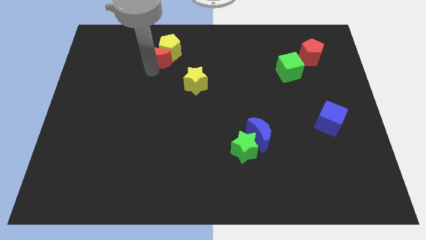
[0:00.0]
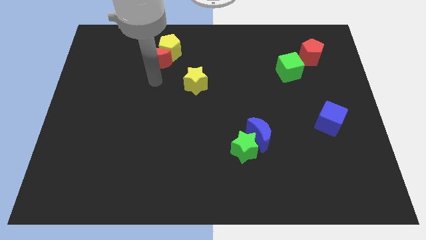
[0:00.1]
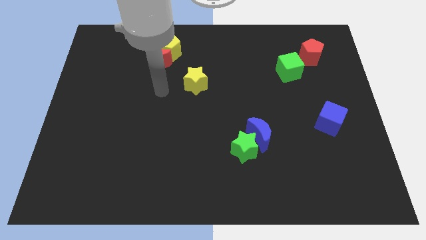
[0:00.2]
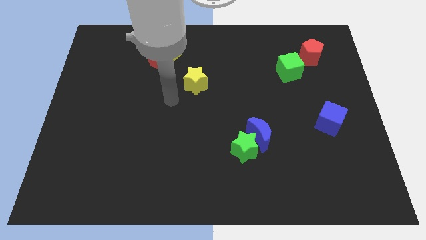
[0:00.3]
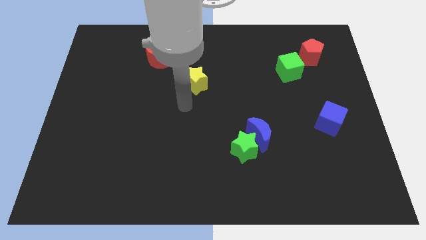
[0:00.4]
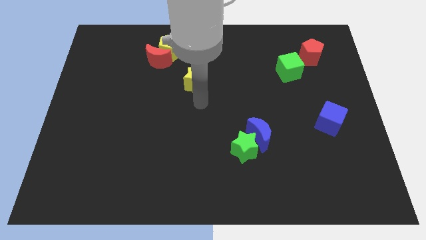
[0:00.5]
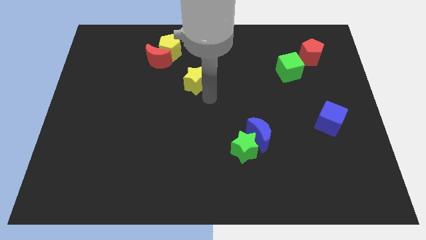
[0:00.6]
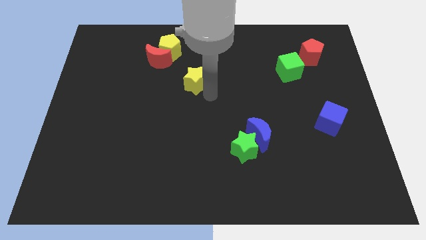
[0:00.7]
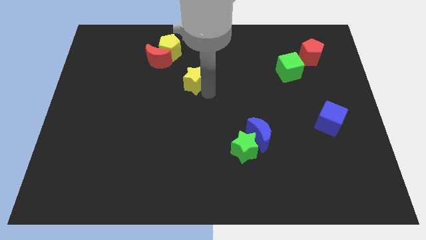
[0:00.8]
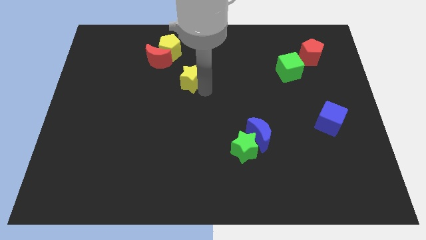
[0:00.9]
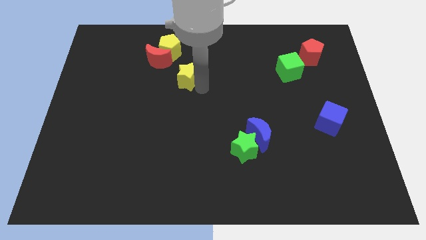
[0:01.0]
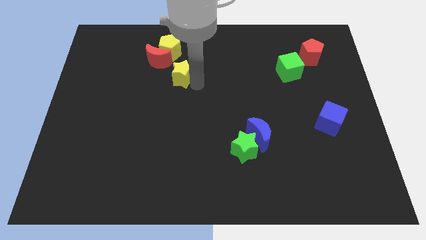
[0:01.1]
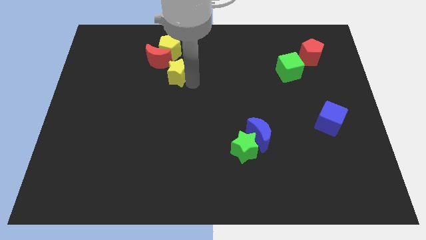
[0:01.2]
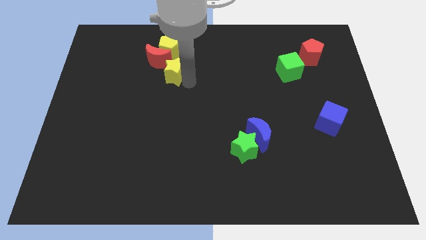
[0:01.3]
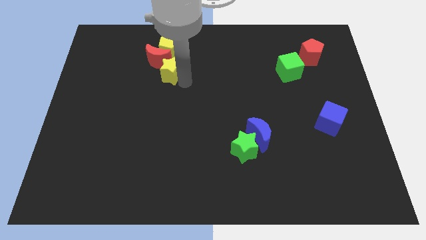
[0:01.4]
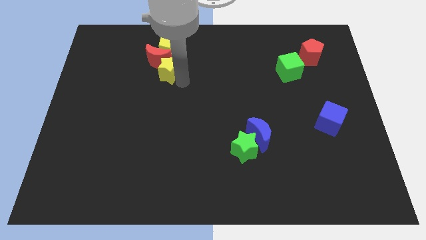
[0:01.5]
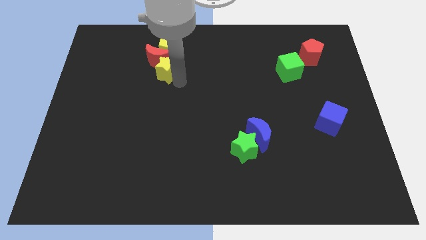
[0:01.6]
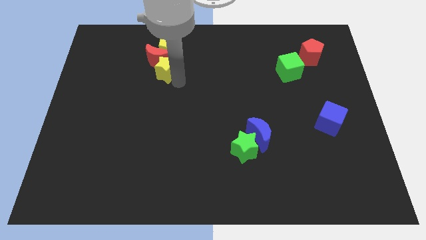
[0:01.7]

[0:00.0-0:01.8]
put the yellow star at the bottom of red moon

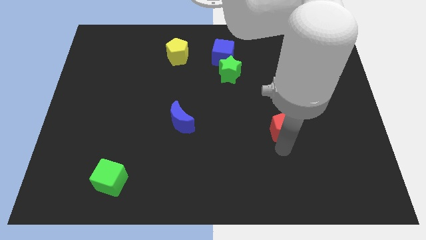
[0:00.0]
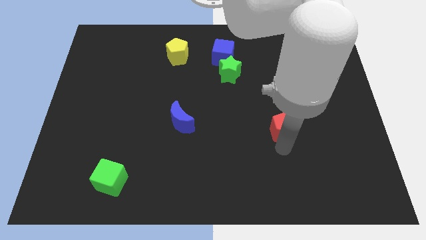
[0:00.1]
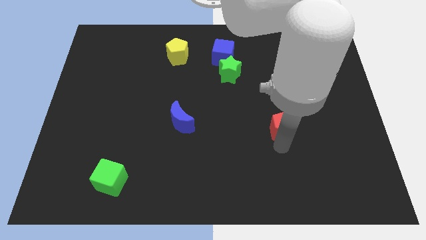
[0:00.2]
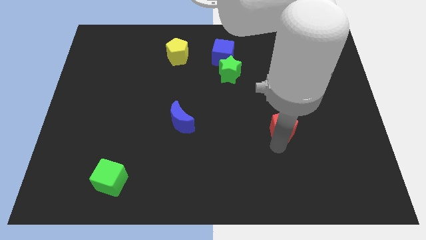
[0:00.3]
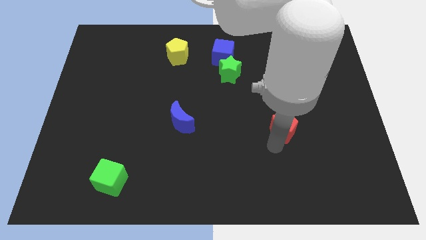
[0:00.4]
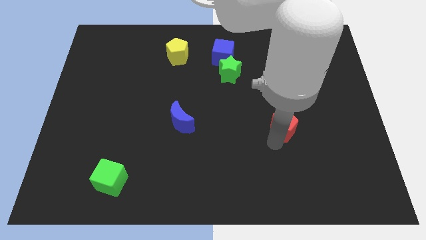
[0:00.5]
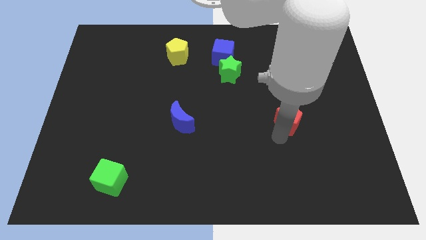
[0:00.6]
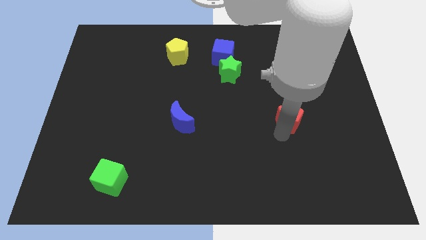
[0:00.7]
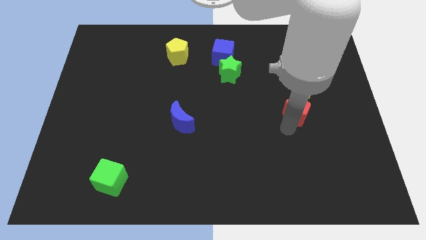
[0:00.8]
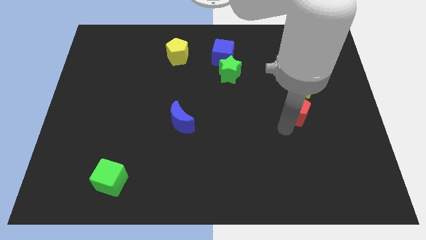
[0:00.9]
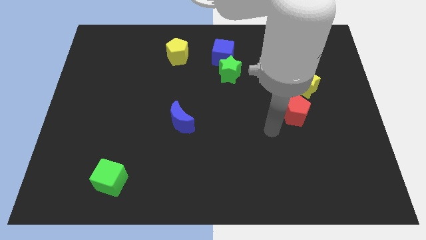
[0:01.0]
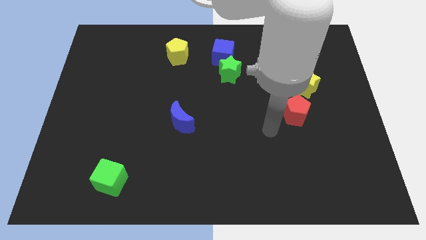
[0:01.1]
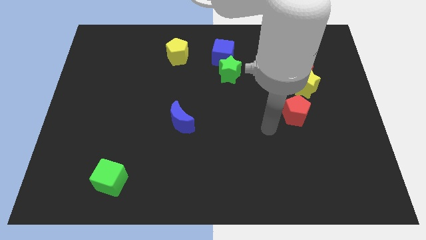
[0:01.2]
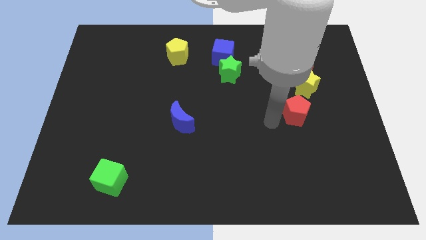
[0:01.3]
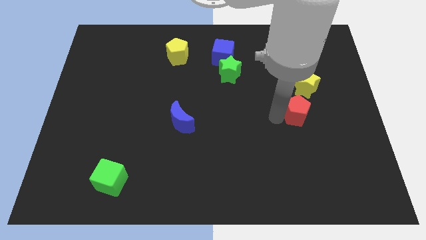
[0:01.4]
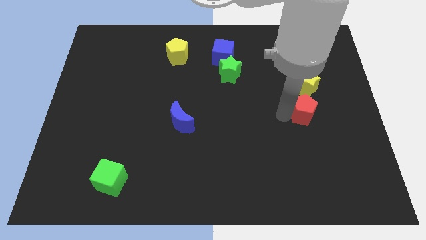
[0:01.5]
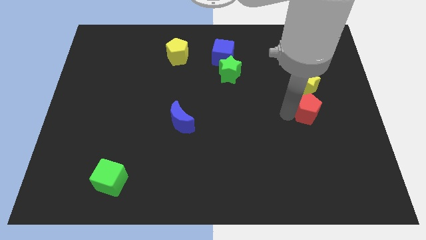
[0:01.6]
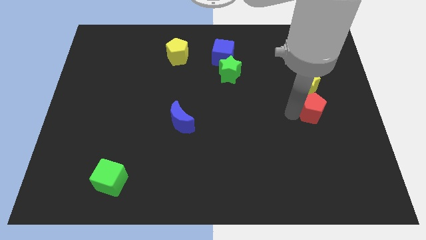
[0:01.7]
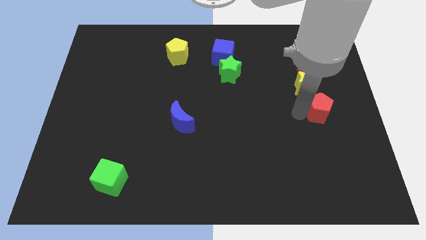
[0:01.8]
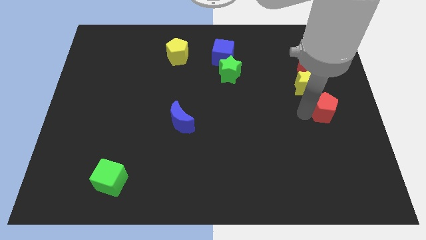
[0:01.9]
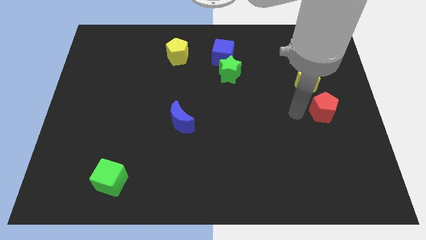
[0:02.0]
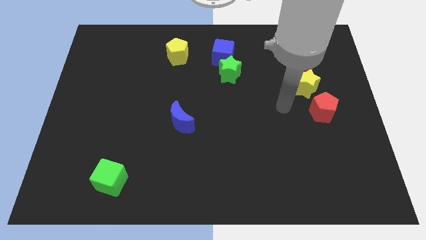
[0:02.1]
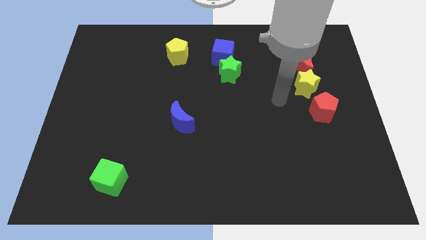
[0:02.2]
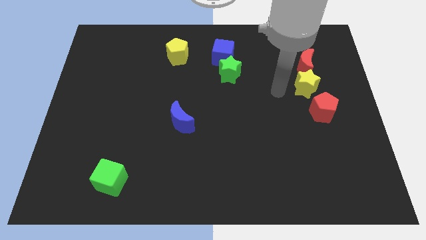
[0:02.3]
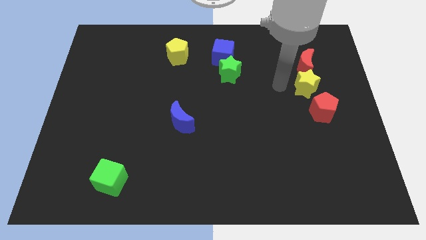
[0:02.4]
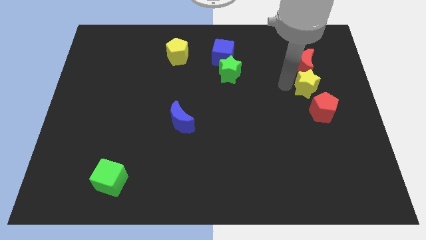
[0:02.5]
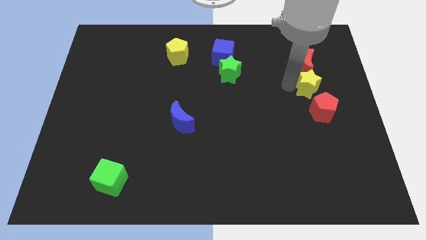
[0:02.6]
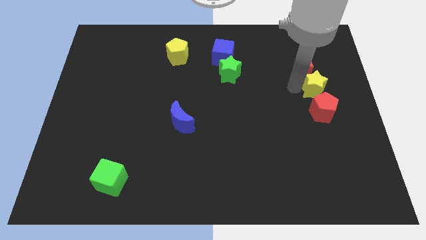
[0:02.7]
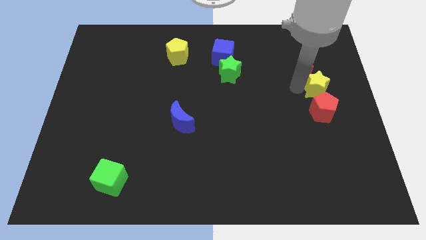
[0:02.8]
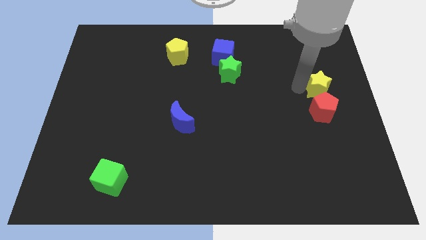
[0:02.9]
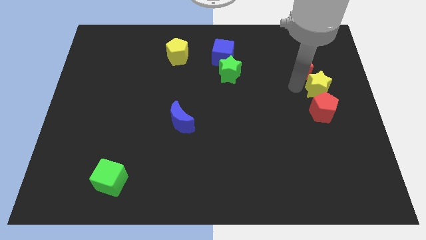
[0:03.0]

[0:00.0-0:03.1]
put the red pentagon and yellow star under the red moon

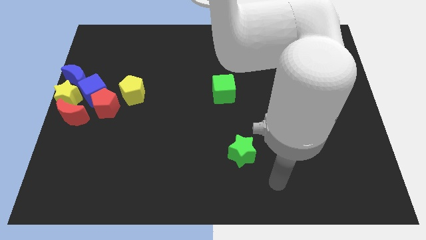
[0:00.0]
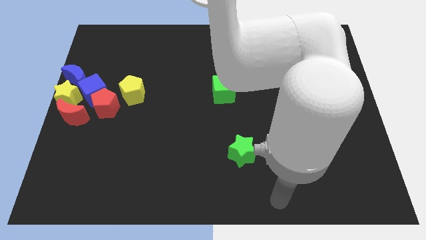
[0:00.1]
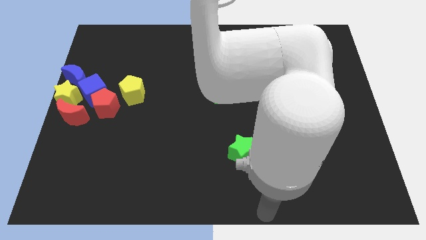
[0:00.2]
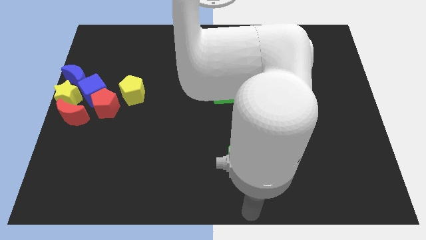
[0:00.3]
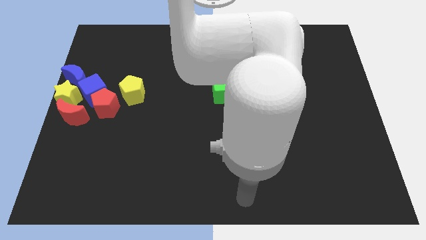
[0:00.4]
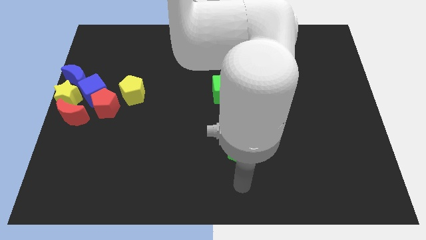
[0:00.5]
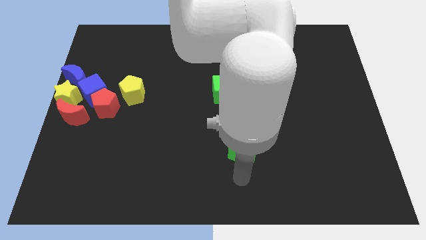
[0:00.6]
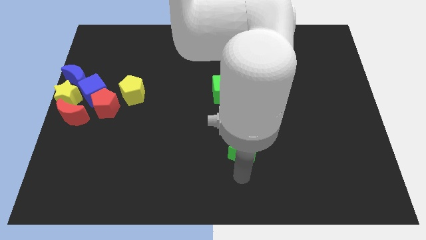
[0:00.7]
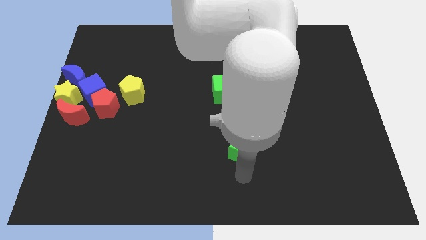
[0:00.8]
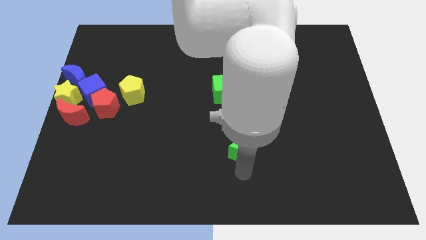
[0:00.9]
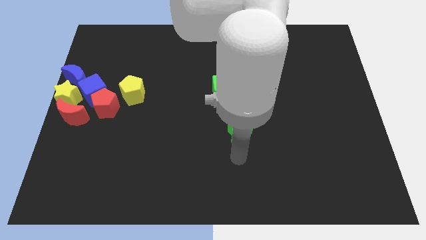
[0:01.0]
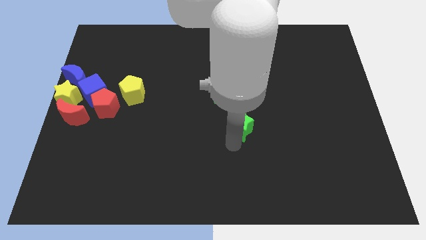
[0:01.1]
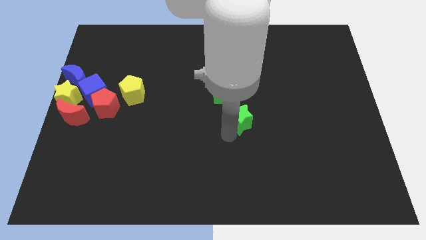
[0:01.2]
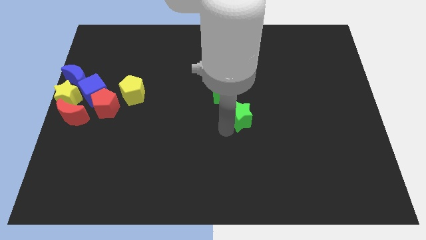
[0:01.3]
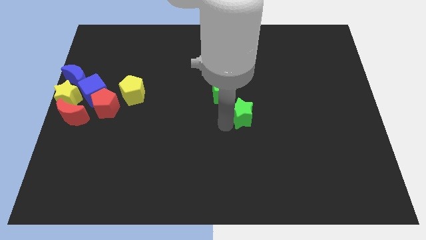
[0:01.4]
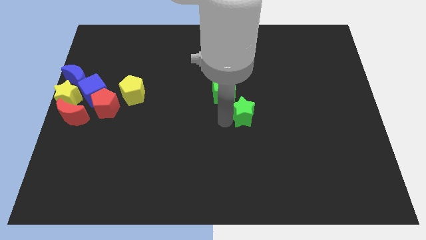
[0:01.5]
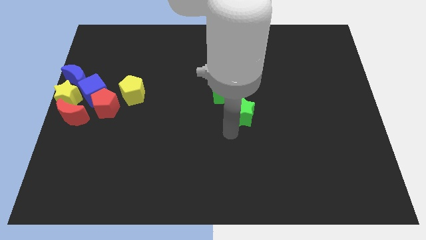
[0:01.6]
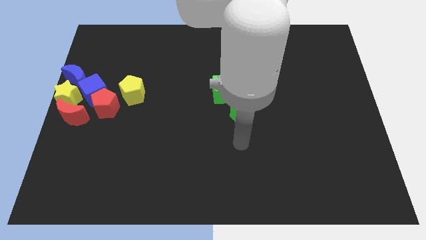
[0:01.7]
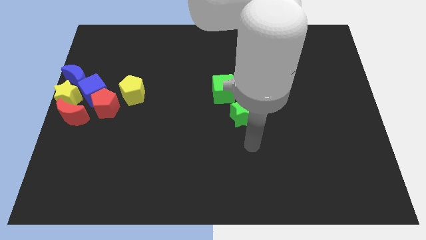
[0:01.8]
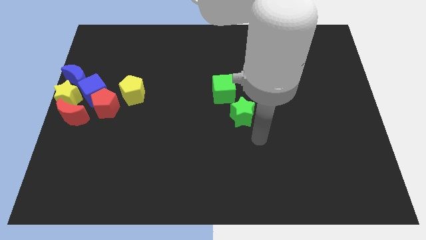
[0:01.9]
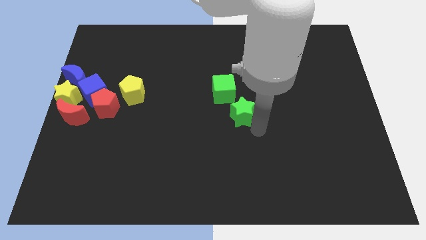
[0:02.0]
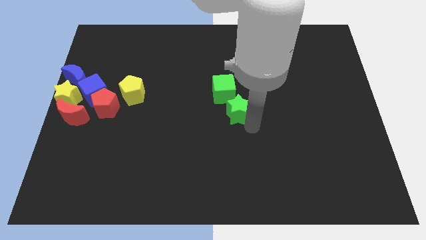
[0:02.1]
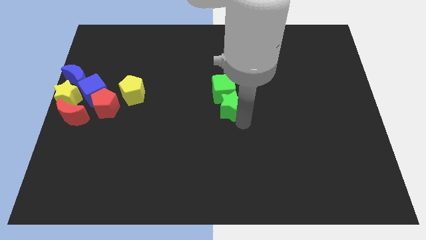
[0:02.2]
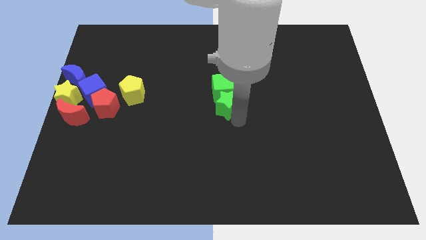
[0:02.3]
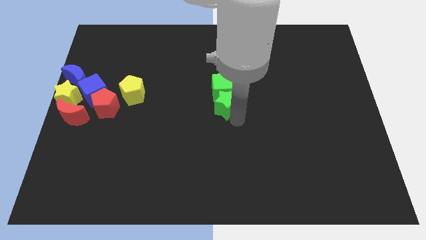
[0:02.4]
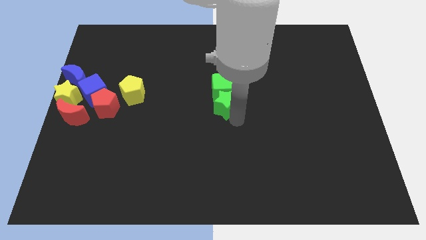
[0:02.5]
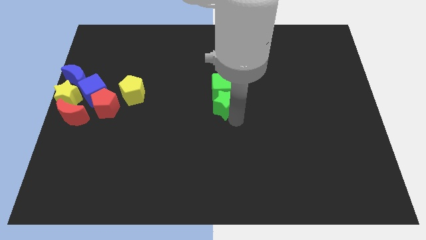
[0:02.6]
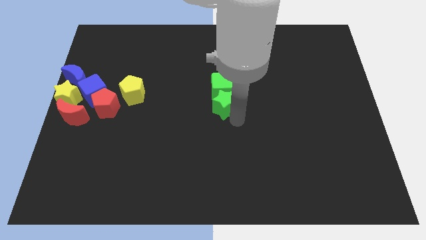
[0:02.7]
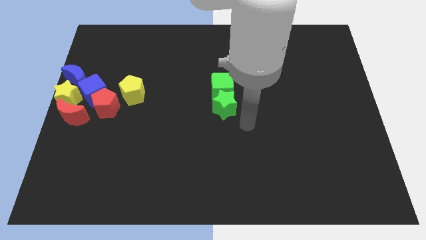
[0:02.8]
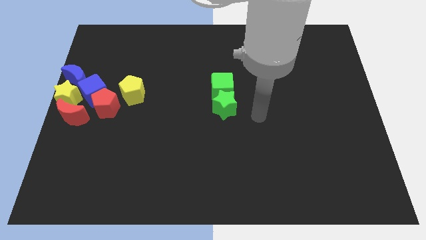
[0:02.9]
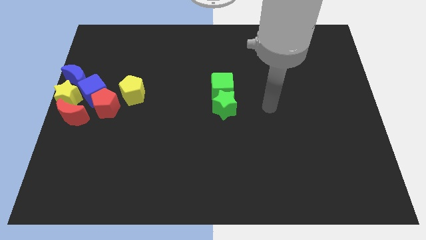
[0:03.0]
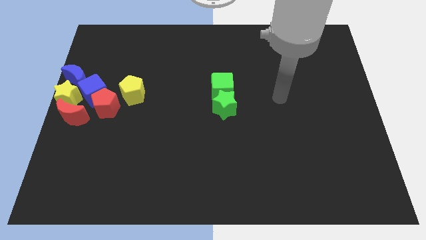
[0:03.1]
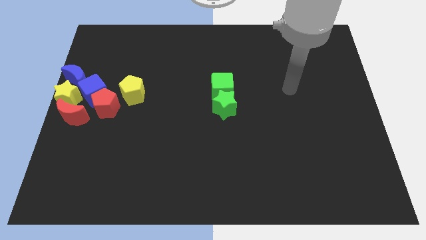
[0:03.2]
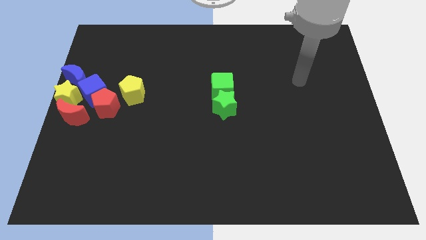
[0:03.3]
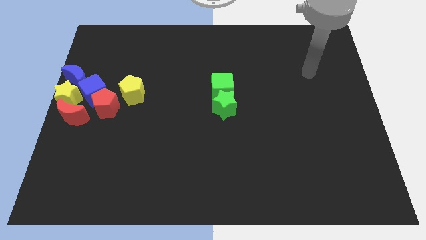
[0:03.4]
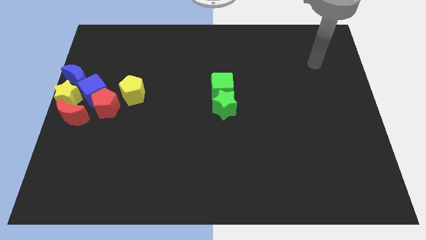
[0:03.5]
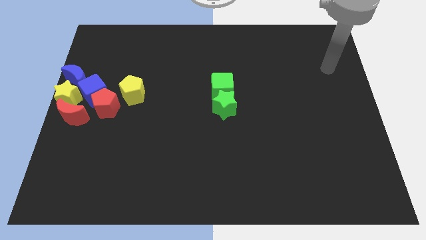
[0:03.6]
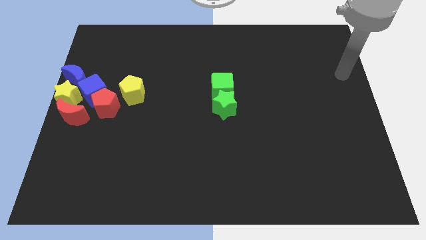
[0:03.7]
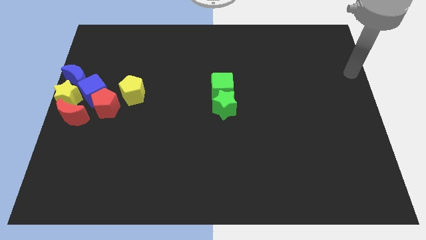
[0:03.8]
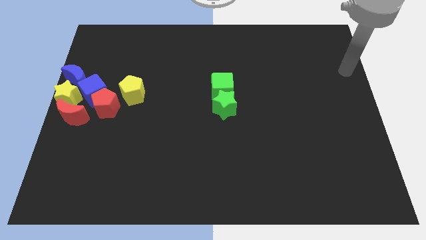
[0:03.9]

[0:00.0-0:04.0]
push the green star at the bottom of the green cube
